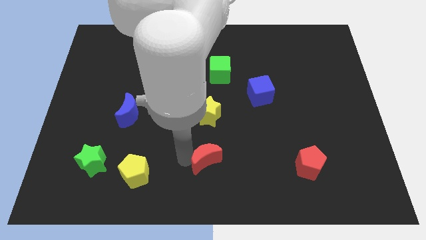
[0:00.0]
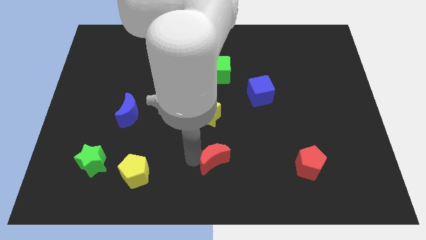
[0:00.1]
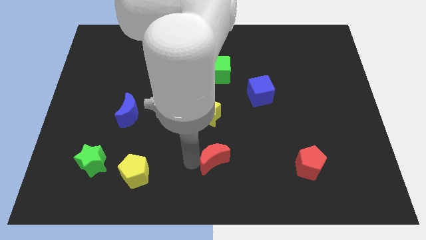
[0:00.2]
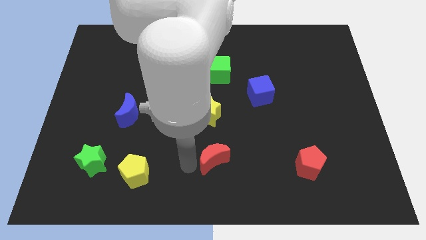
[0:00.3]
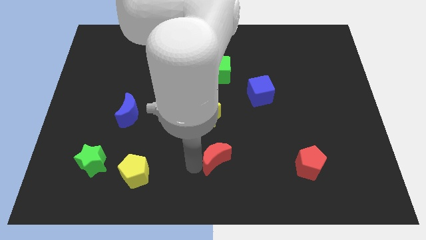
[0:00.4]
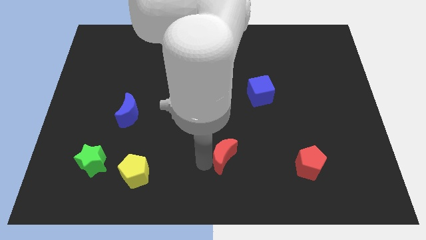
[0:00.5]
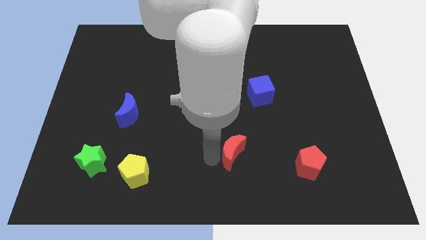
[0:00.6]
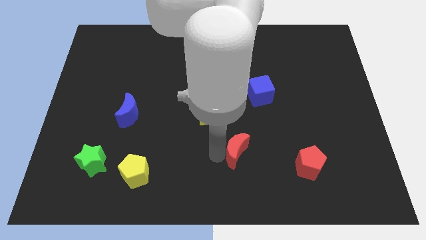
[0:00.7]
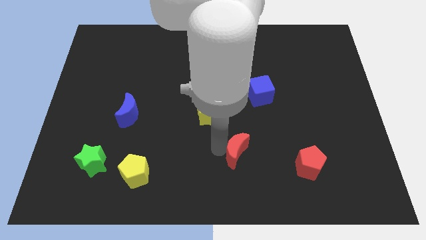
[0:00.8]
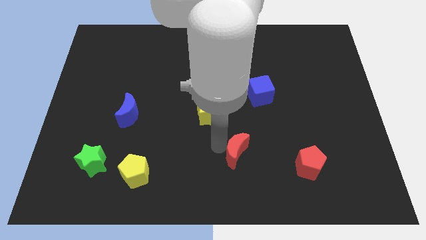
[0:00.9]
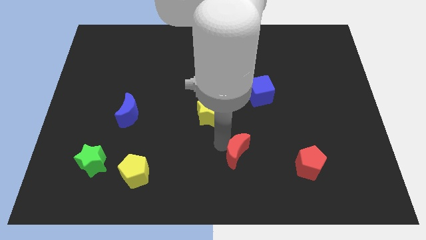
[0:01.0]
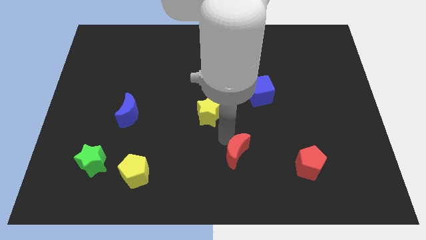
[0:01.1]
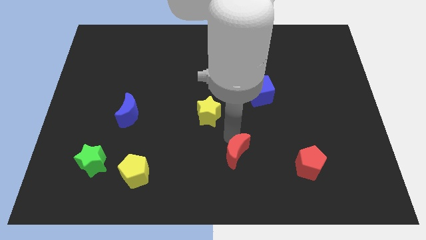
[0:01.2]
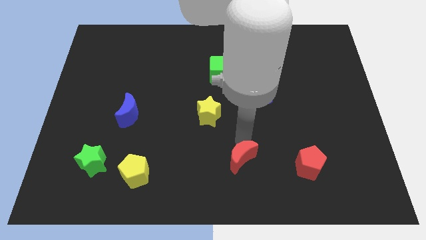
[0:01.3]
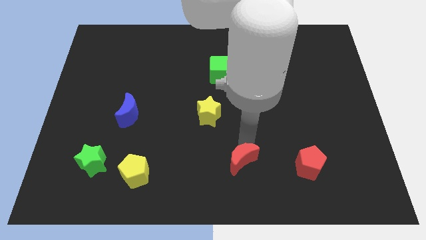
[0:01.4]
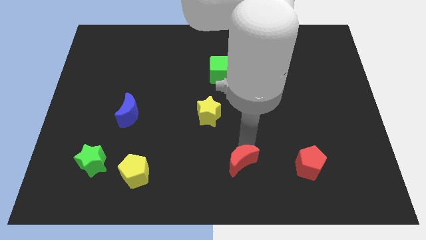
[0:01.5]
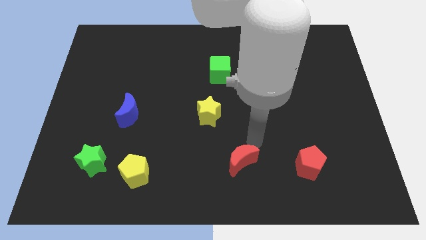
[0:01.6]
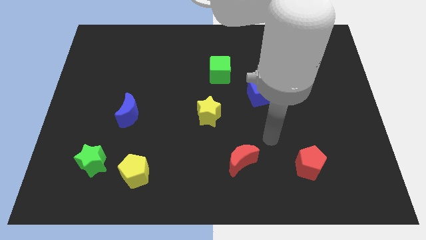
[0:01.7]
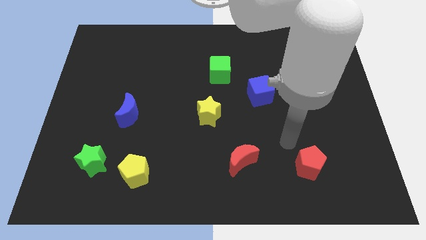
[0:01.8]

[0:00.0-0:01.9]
move the red crescent diagonally bottom left to the blue cube

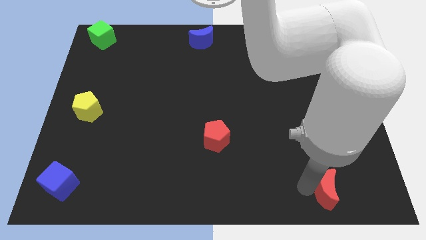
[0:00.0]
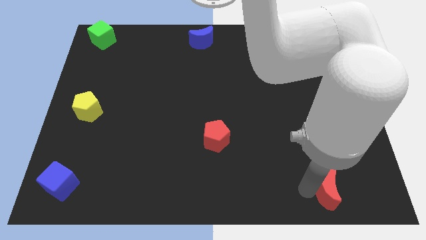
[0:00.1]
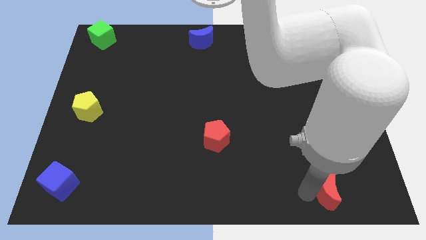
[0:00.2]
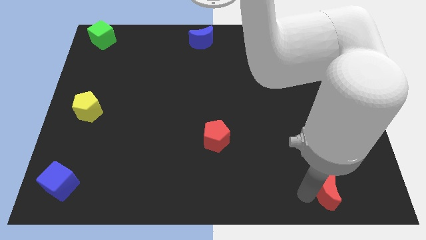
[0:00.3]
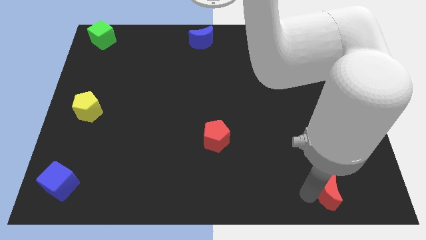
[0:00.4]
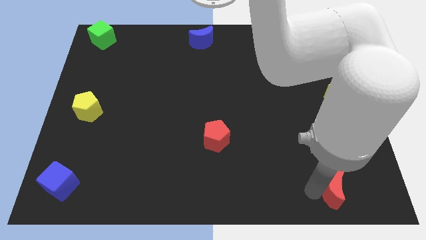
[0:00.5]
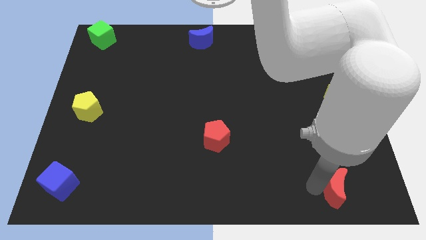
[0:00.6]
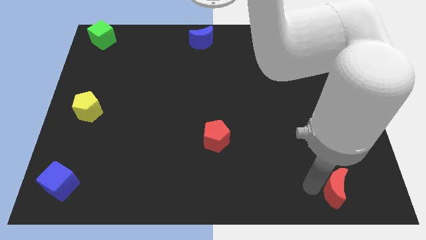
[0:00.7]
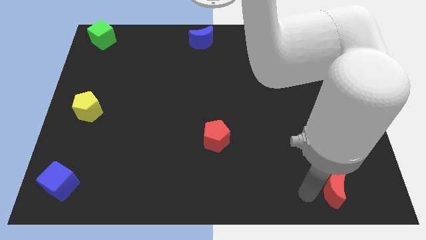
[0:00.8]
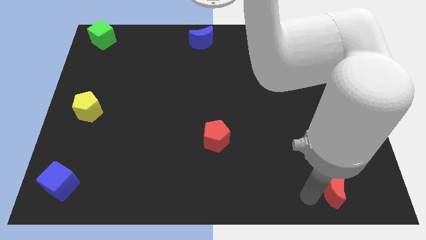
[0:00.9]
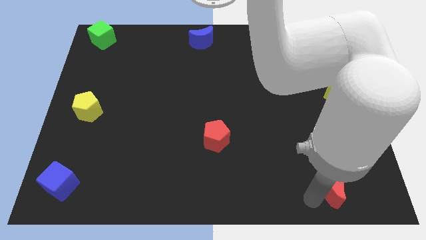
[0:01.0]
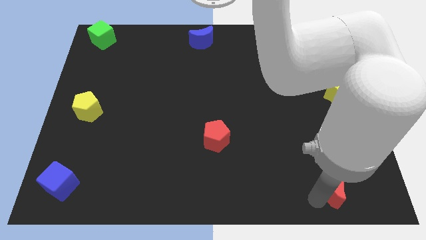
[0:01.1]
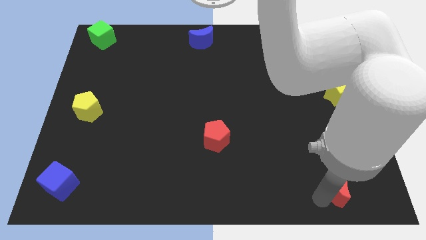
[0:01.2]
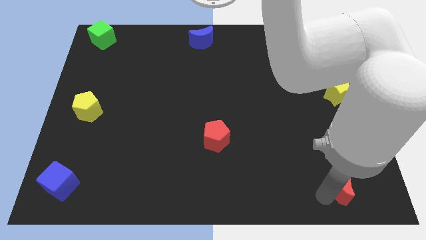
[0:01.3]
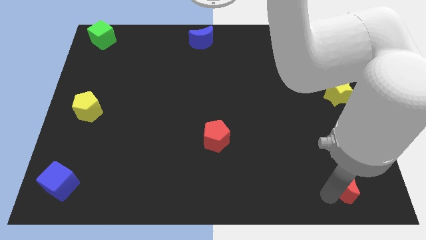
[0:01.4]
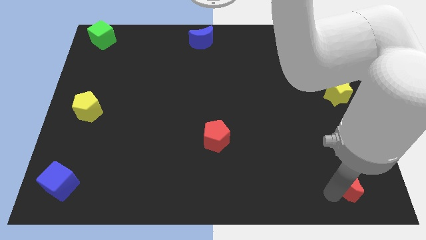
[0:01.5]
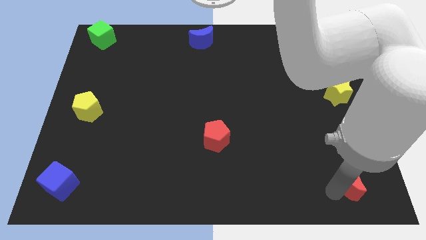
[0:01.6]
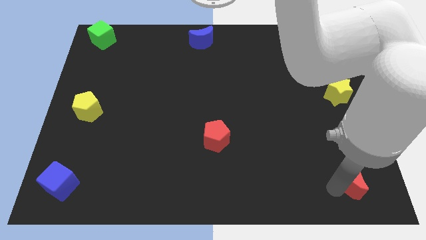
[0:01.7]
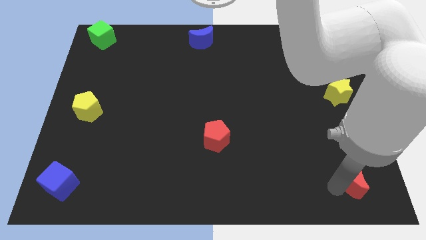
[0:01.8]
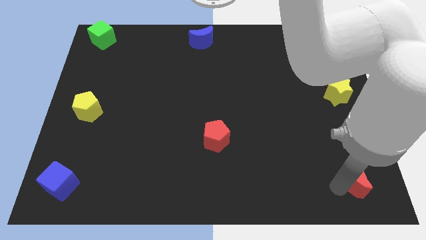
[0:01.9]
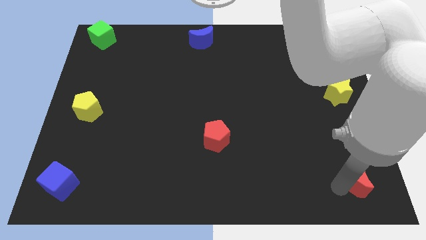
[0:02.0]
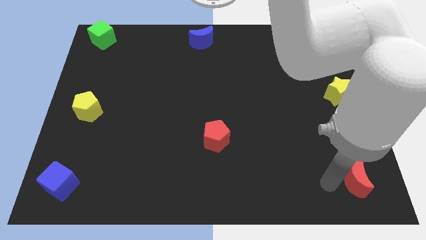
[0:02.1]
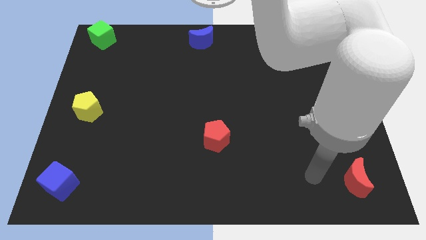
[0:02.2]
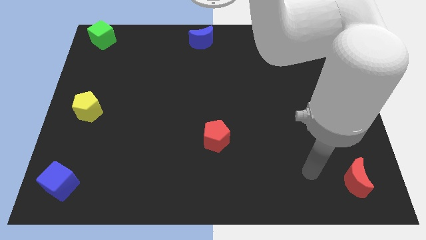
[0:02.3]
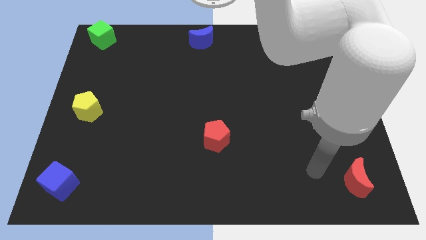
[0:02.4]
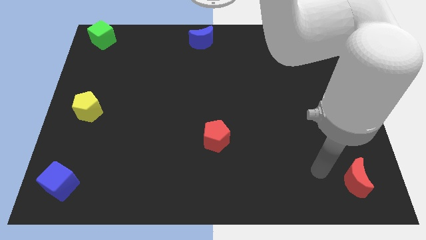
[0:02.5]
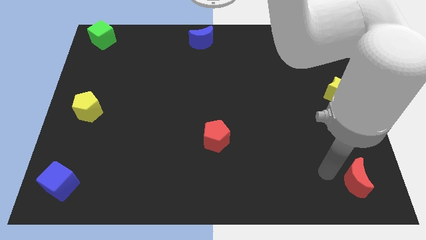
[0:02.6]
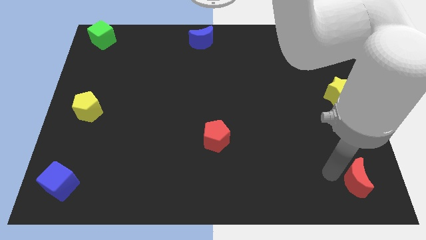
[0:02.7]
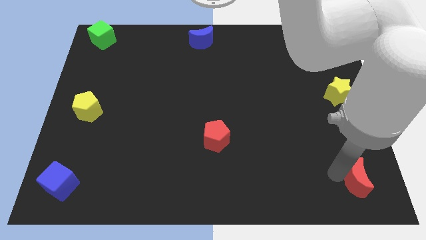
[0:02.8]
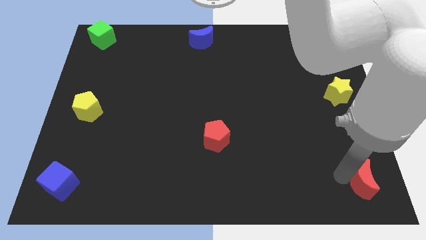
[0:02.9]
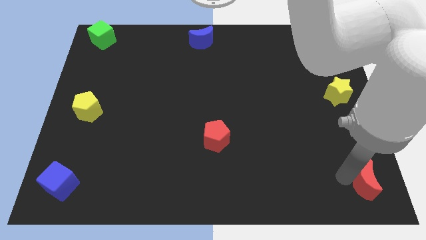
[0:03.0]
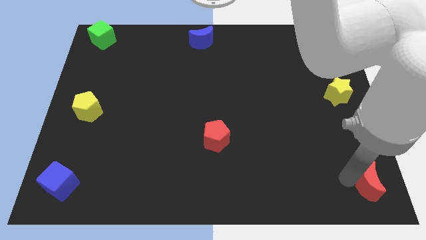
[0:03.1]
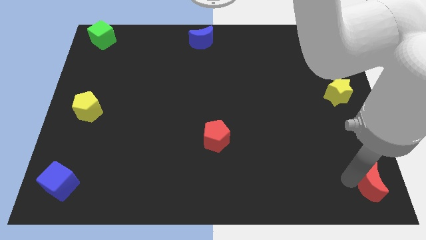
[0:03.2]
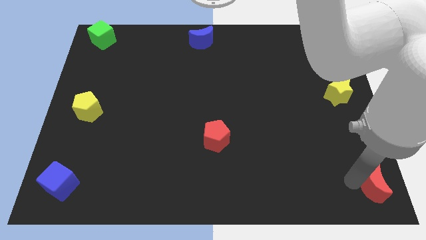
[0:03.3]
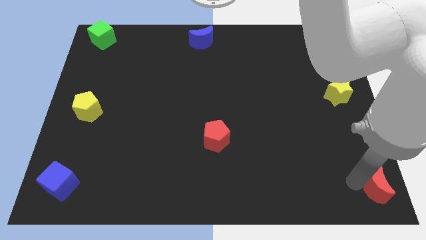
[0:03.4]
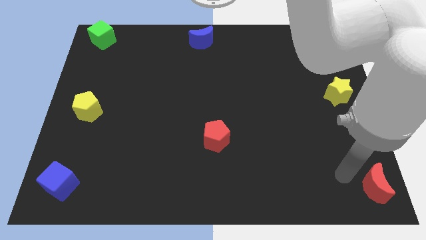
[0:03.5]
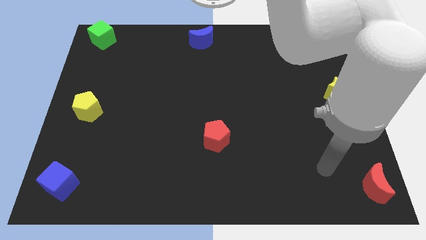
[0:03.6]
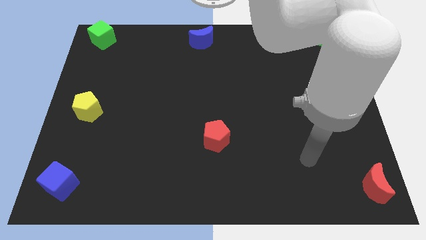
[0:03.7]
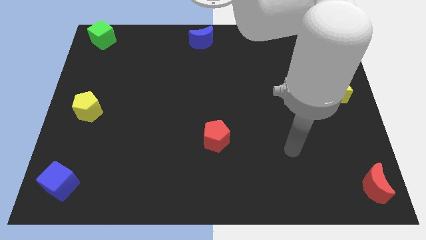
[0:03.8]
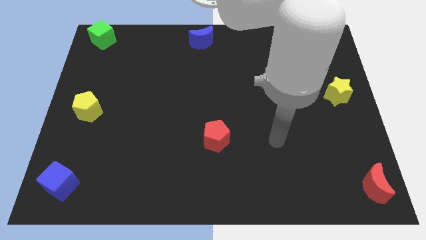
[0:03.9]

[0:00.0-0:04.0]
move the red moon to the bottom right

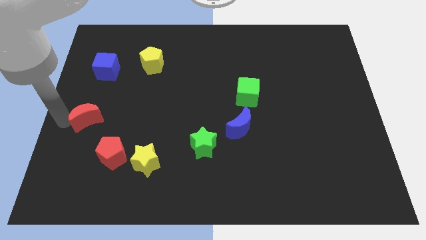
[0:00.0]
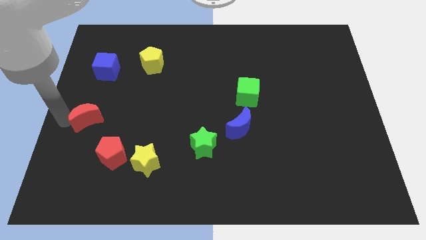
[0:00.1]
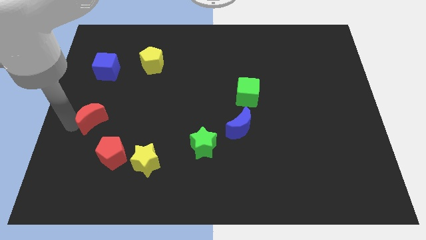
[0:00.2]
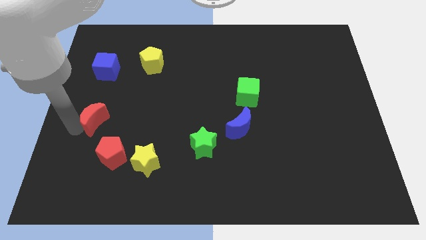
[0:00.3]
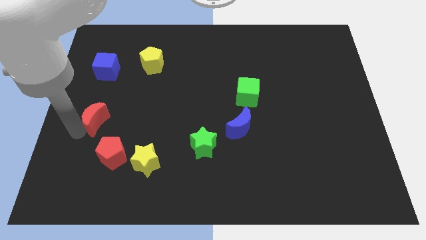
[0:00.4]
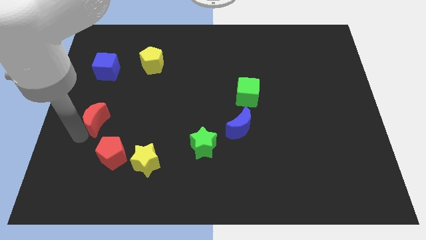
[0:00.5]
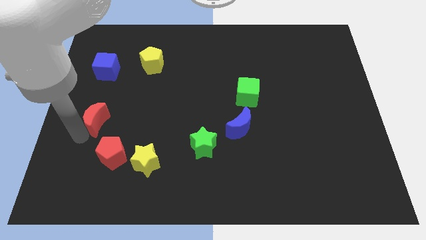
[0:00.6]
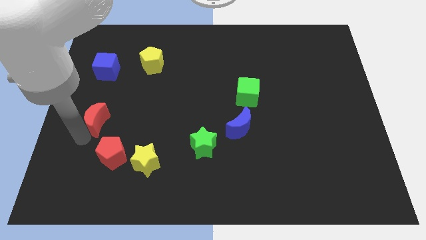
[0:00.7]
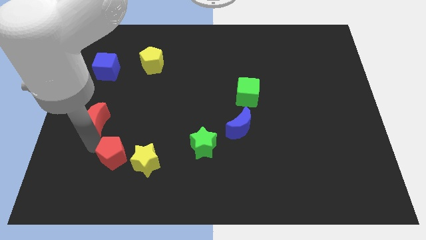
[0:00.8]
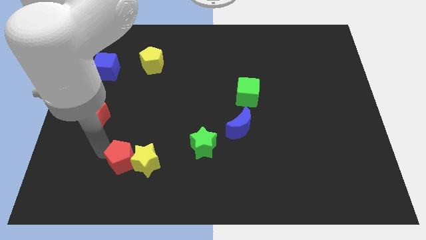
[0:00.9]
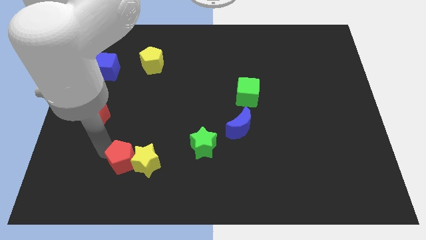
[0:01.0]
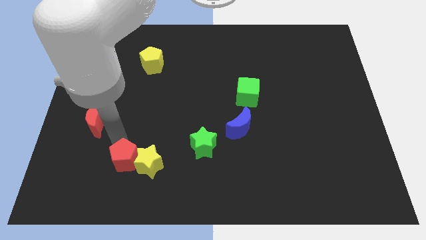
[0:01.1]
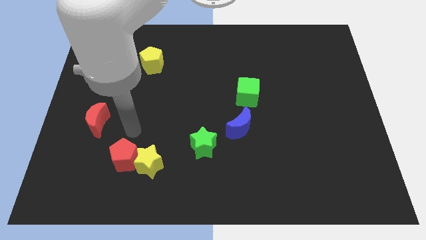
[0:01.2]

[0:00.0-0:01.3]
slightly move the red blocks to the right of the board

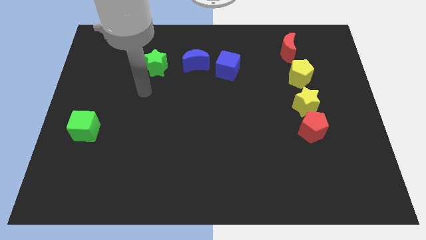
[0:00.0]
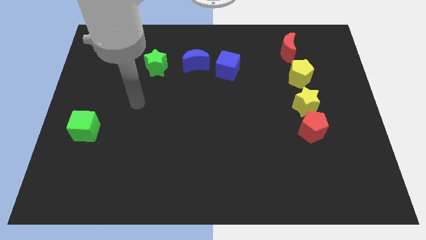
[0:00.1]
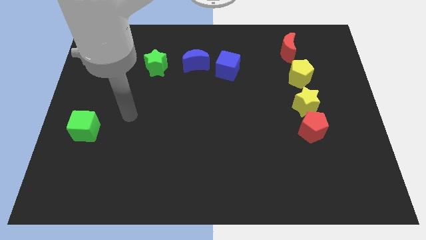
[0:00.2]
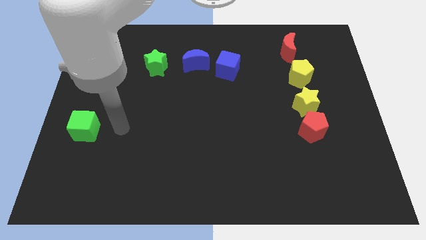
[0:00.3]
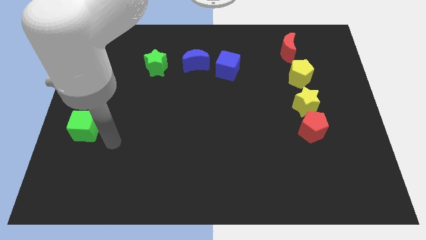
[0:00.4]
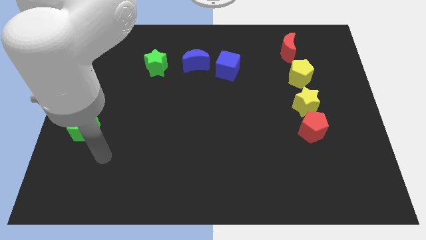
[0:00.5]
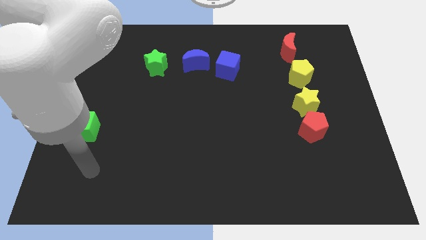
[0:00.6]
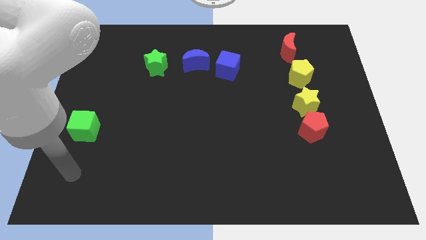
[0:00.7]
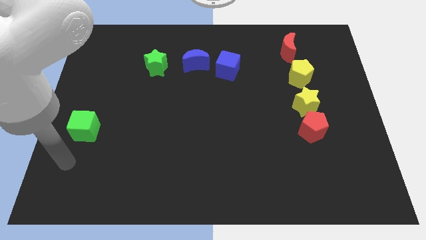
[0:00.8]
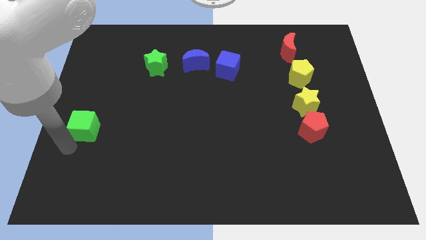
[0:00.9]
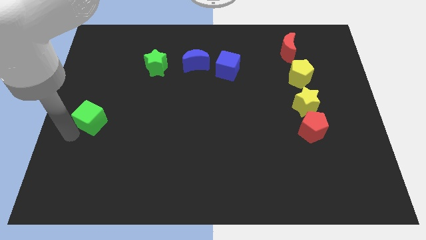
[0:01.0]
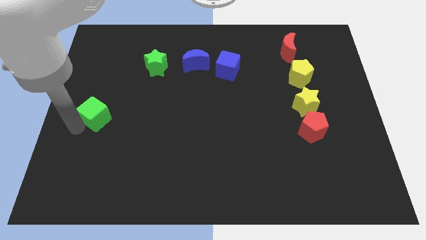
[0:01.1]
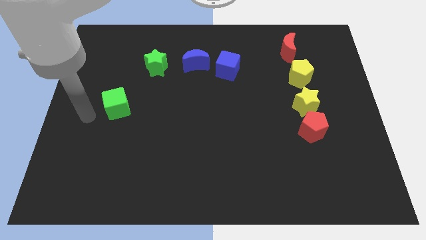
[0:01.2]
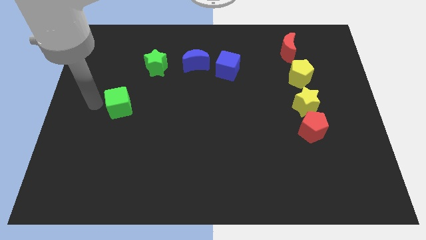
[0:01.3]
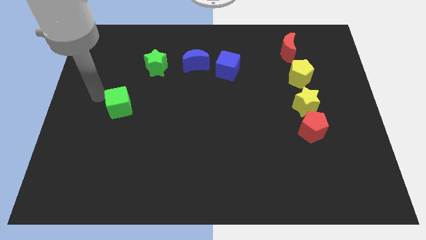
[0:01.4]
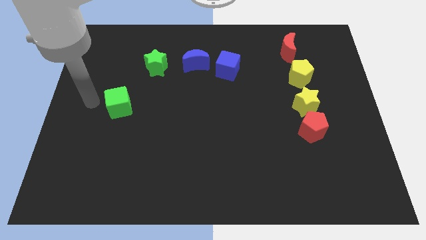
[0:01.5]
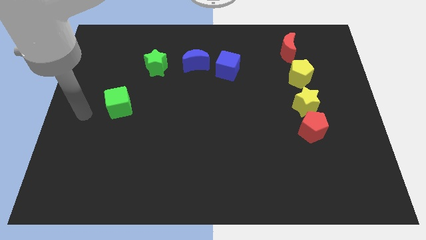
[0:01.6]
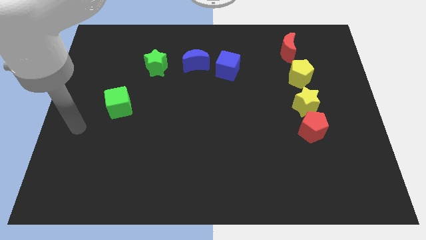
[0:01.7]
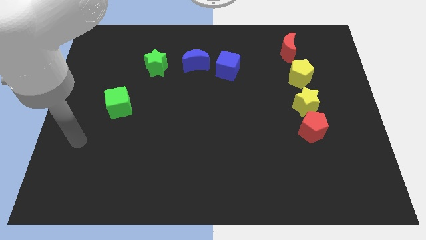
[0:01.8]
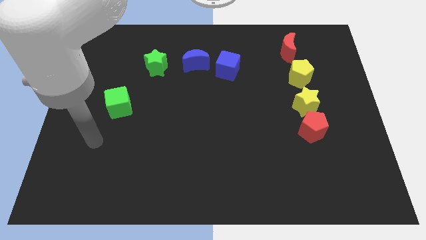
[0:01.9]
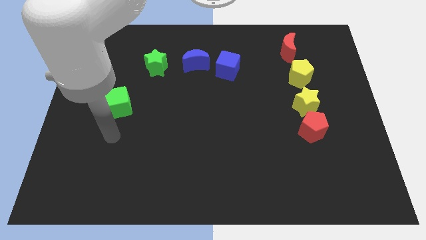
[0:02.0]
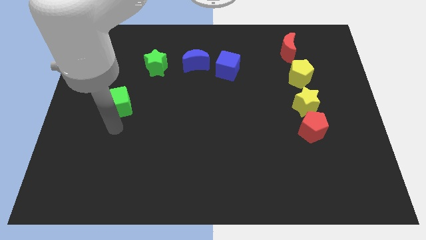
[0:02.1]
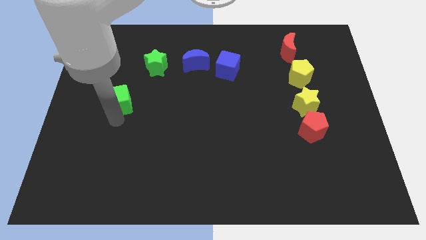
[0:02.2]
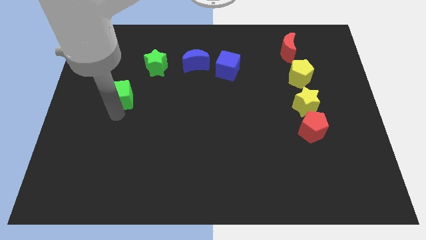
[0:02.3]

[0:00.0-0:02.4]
move the green cube towards upward
